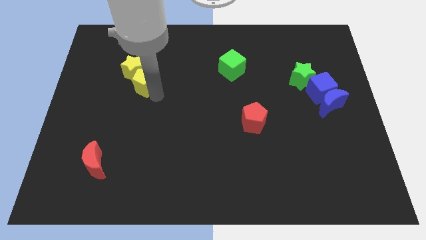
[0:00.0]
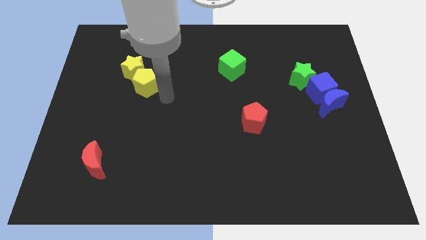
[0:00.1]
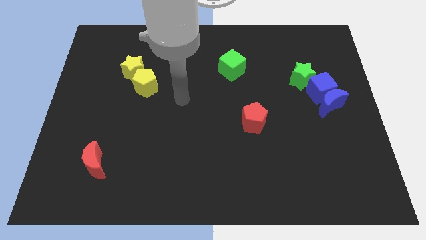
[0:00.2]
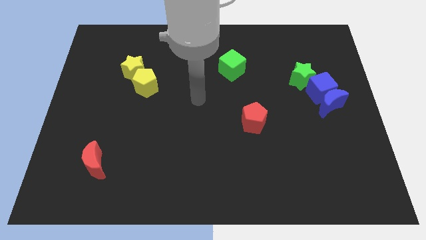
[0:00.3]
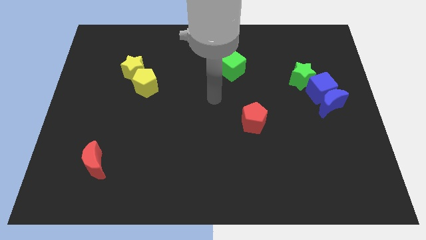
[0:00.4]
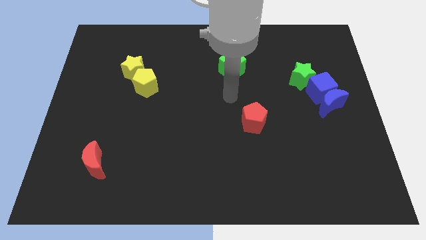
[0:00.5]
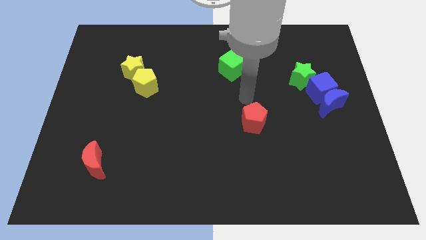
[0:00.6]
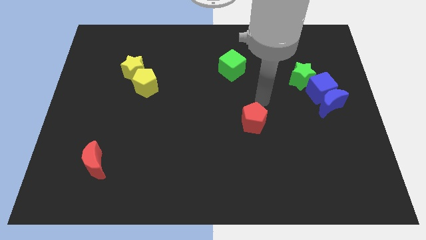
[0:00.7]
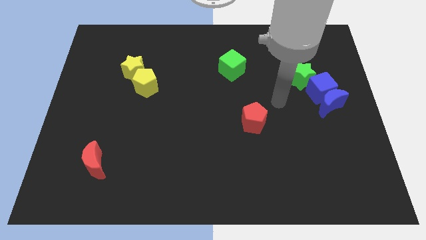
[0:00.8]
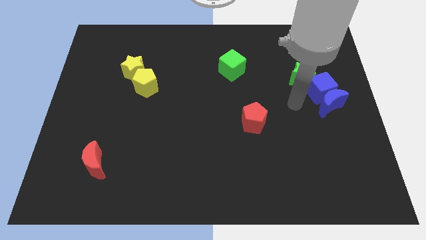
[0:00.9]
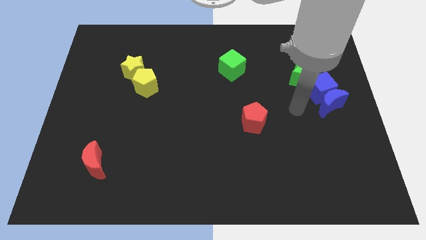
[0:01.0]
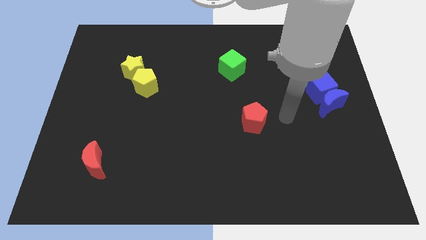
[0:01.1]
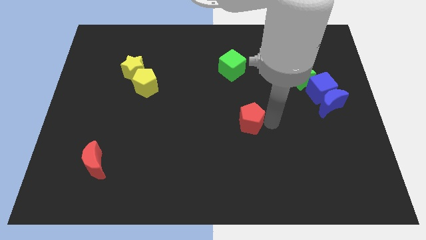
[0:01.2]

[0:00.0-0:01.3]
point your arm at the right side of the red pentagon

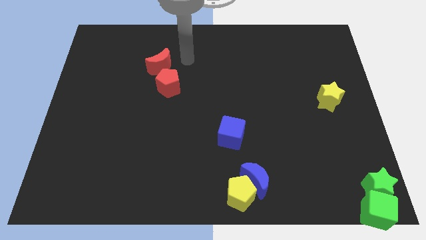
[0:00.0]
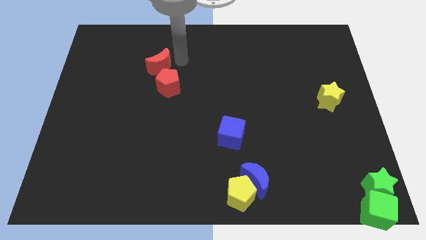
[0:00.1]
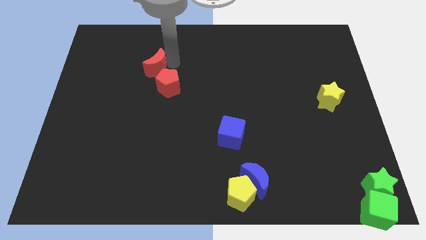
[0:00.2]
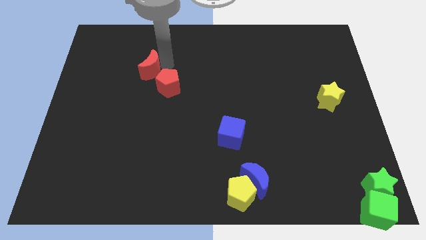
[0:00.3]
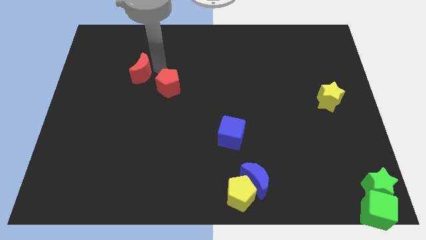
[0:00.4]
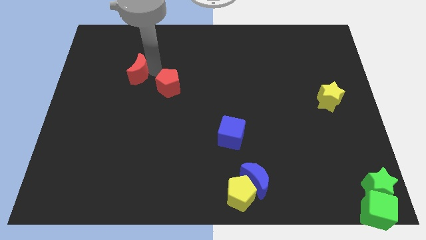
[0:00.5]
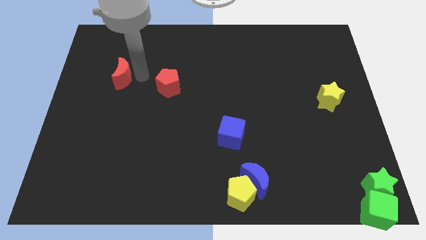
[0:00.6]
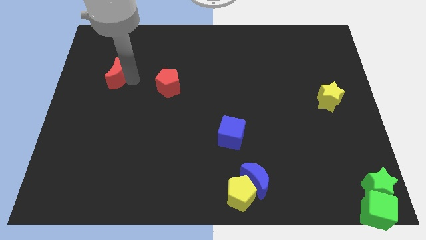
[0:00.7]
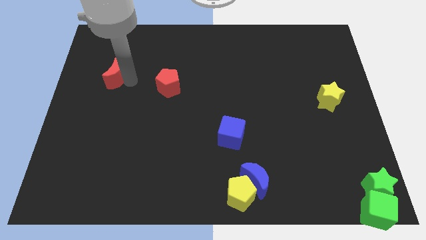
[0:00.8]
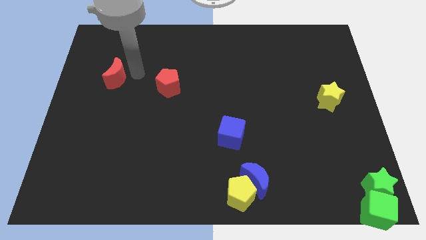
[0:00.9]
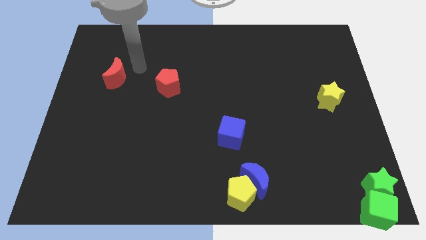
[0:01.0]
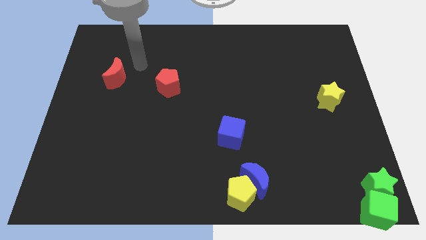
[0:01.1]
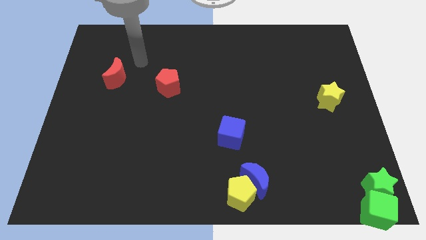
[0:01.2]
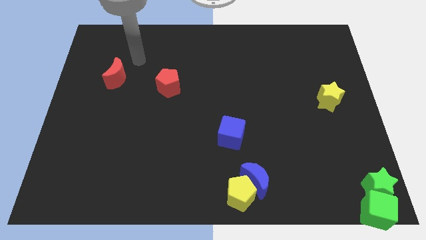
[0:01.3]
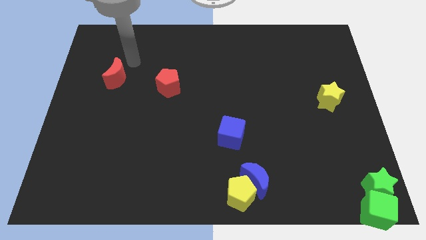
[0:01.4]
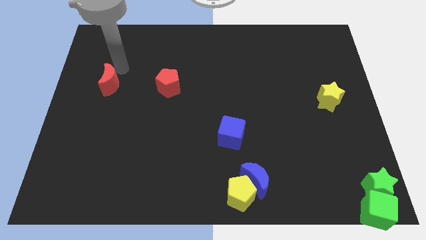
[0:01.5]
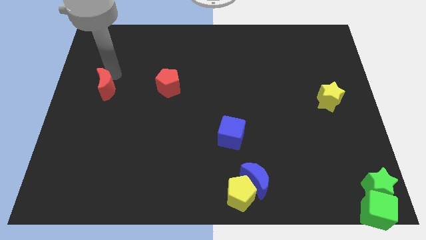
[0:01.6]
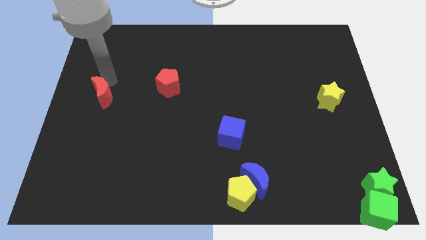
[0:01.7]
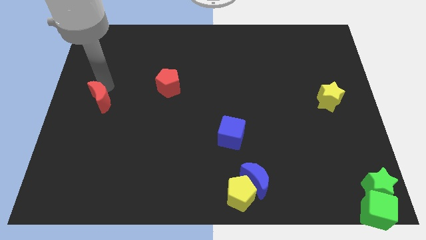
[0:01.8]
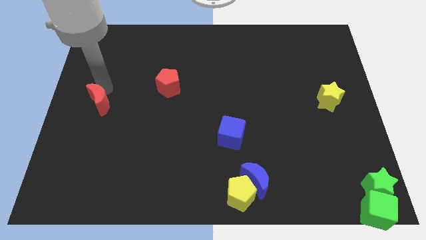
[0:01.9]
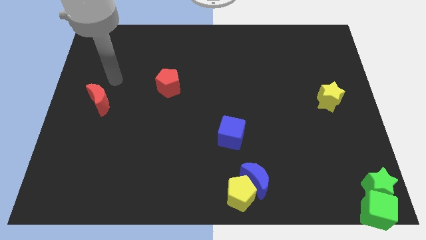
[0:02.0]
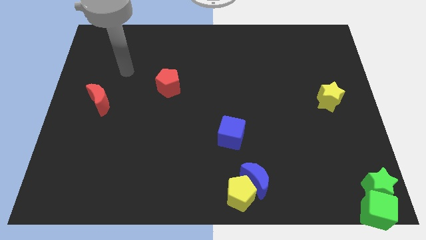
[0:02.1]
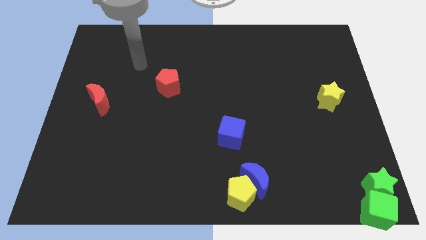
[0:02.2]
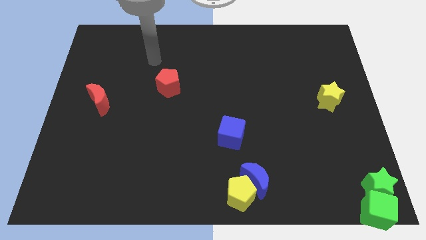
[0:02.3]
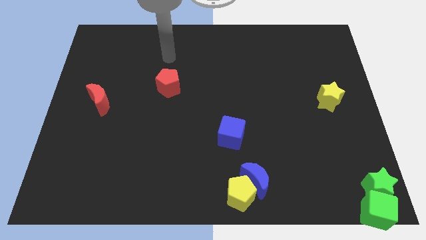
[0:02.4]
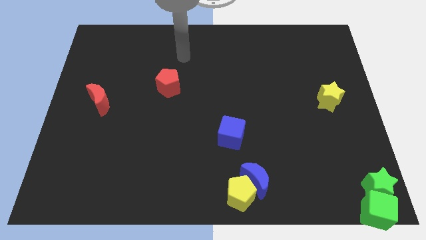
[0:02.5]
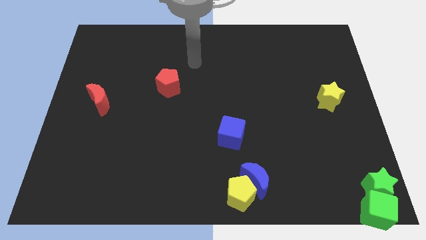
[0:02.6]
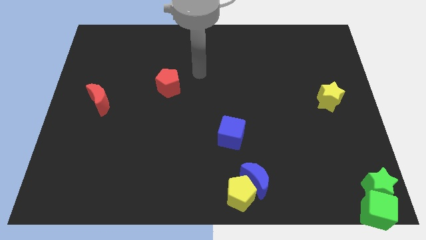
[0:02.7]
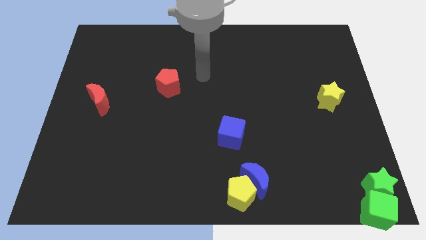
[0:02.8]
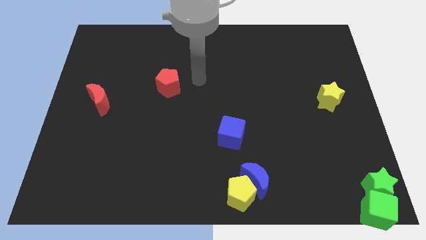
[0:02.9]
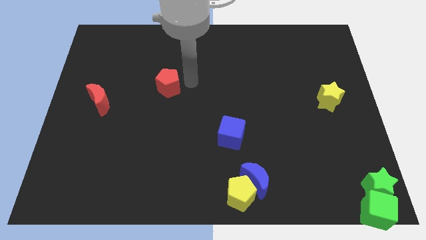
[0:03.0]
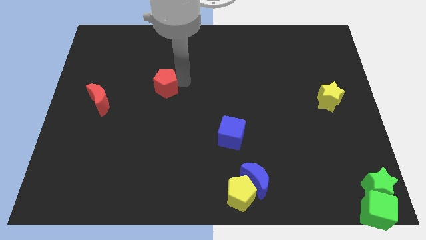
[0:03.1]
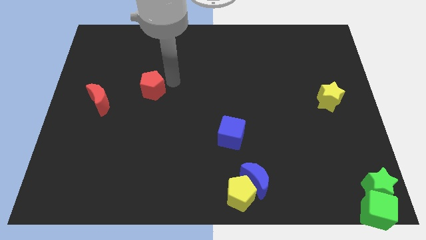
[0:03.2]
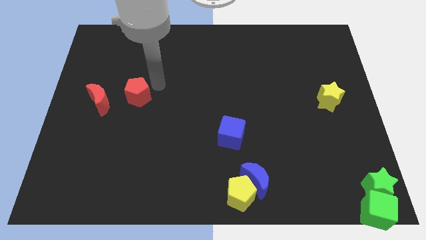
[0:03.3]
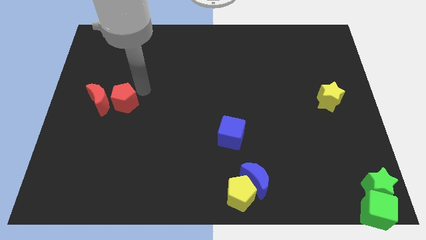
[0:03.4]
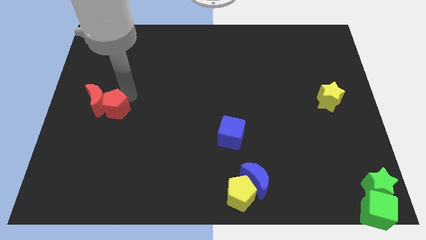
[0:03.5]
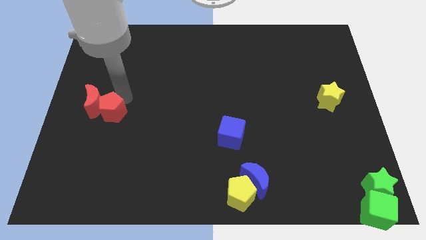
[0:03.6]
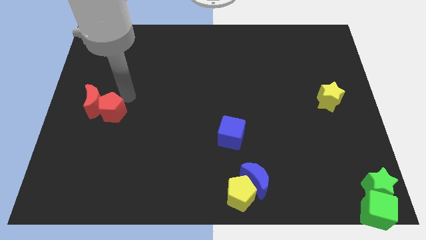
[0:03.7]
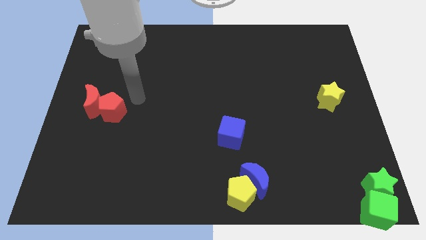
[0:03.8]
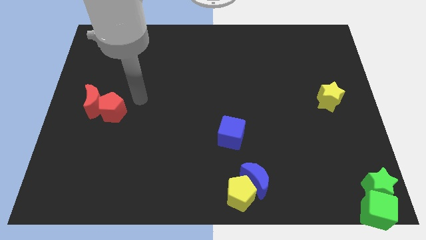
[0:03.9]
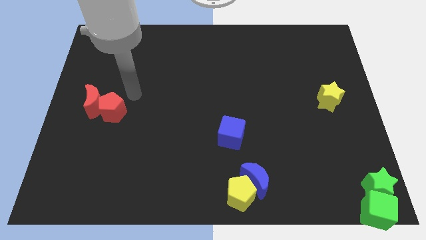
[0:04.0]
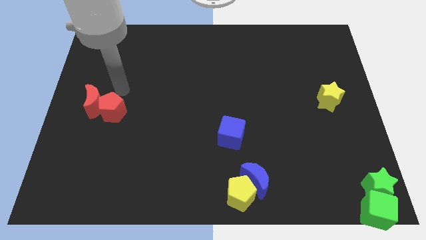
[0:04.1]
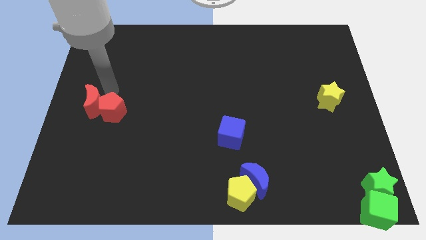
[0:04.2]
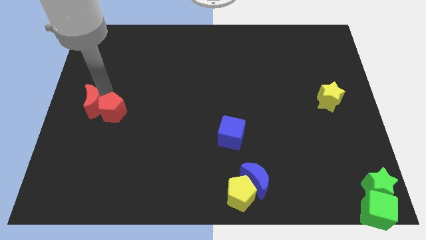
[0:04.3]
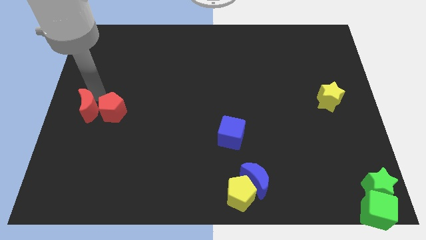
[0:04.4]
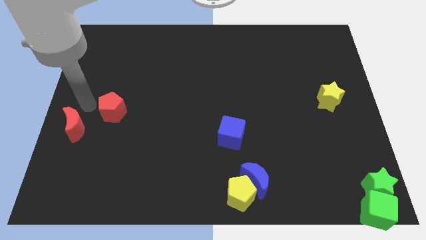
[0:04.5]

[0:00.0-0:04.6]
move red crescent and red pentagon towards the left center of the board

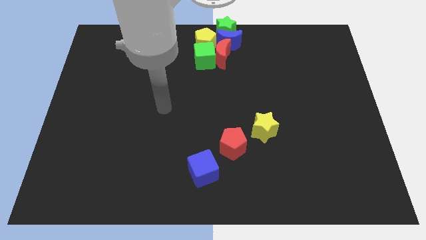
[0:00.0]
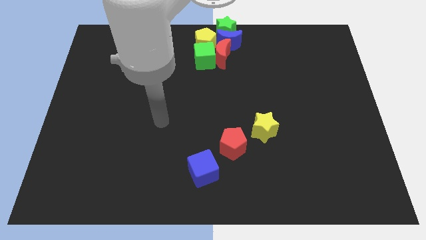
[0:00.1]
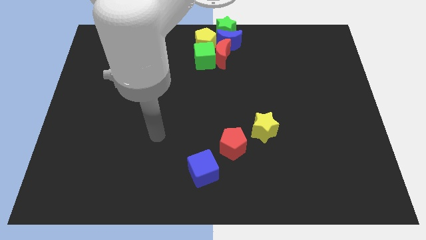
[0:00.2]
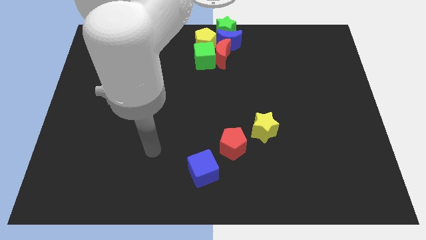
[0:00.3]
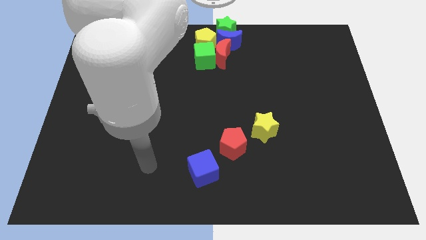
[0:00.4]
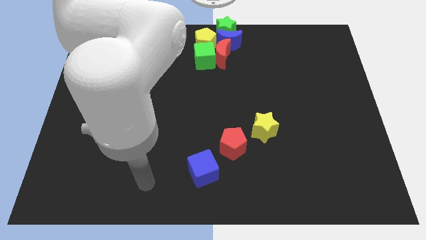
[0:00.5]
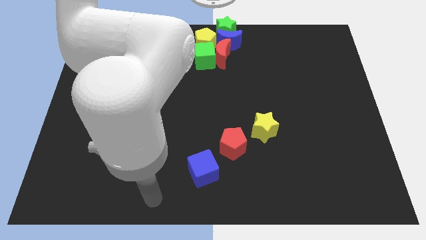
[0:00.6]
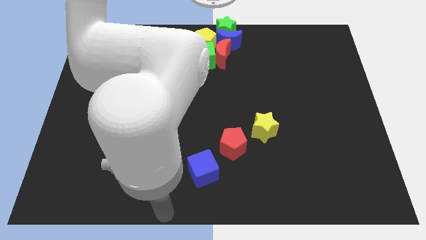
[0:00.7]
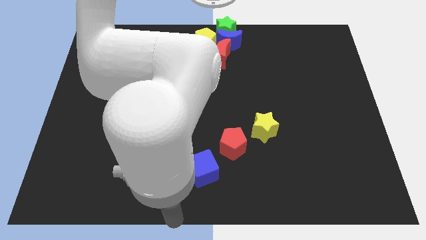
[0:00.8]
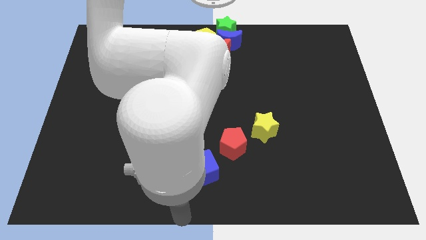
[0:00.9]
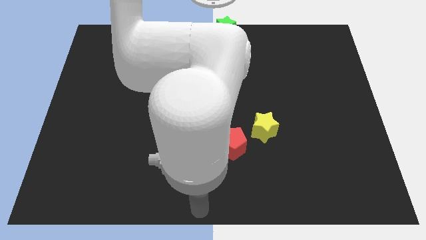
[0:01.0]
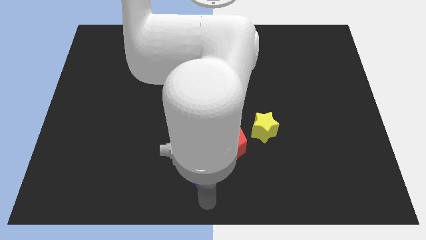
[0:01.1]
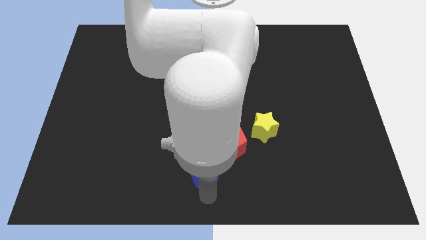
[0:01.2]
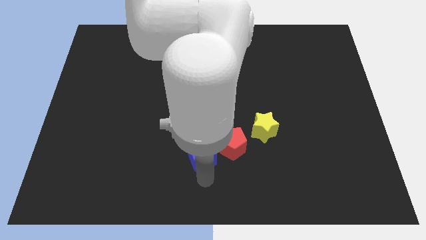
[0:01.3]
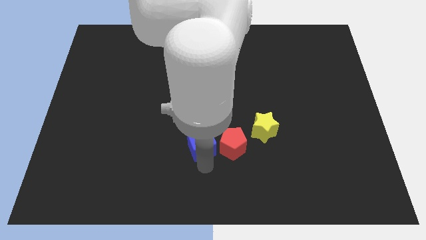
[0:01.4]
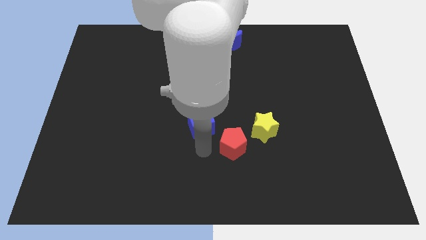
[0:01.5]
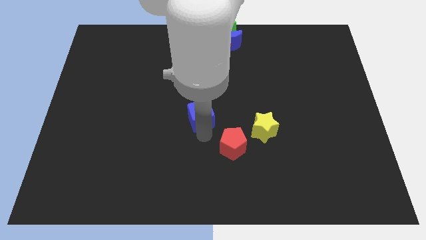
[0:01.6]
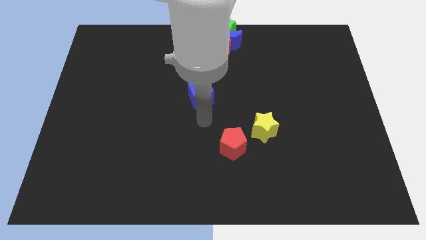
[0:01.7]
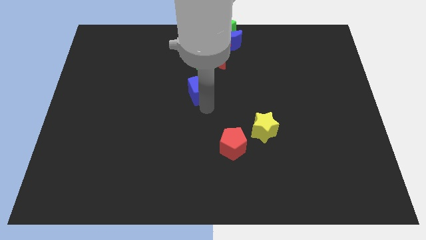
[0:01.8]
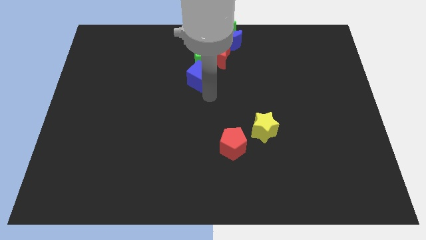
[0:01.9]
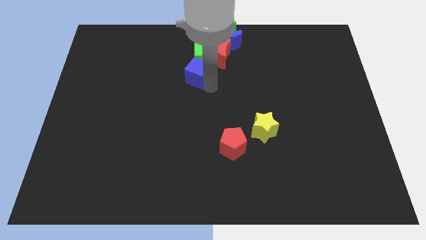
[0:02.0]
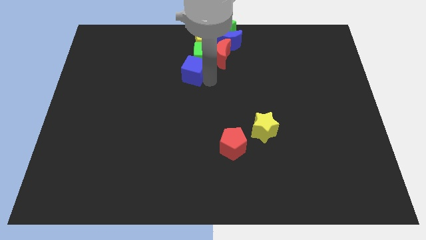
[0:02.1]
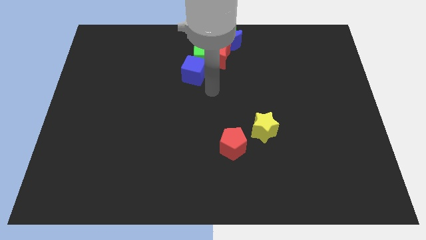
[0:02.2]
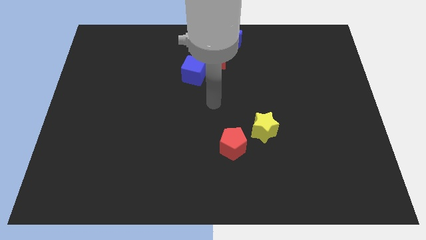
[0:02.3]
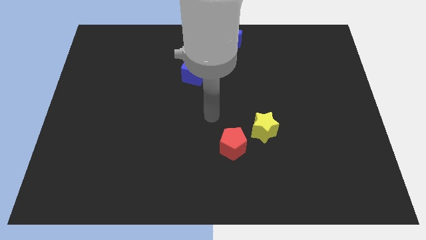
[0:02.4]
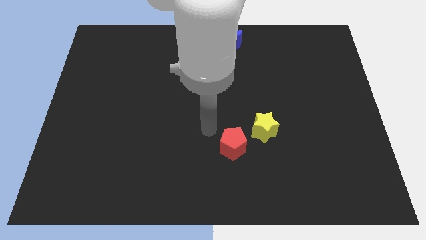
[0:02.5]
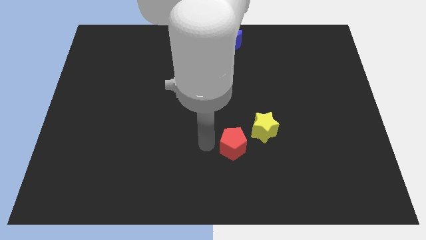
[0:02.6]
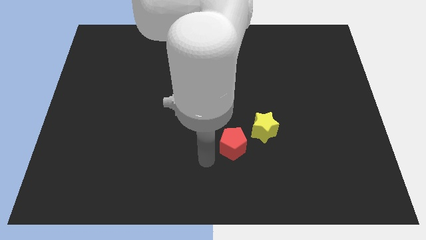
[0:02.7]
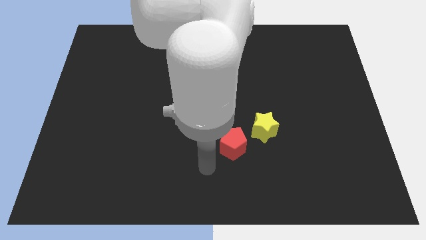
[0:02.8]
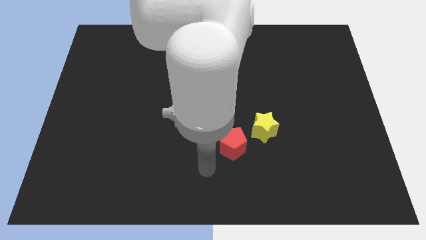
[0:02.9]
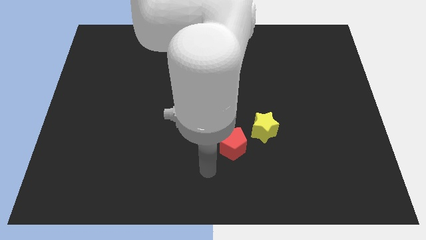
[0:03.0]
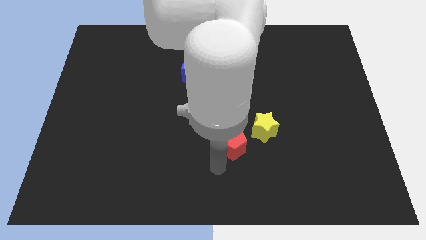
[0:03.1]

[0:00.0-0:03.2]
move the blue cube to the bottom left side of the green cube
